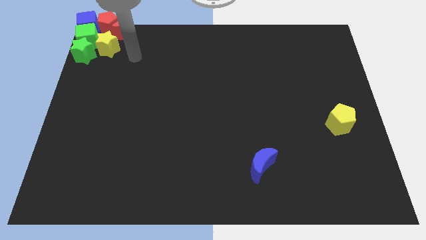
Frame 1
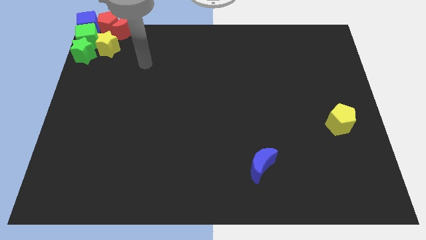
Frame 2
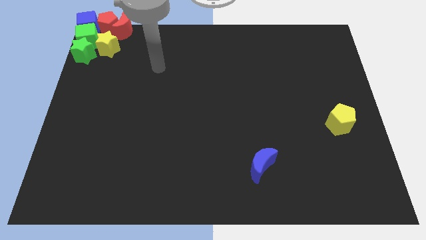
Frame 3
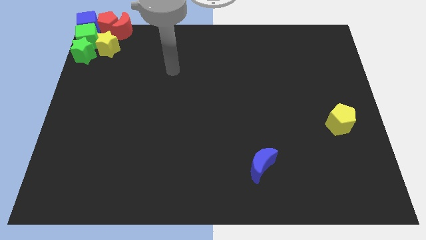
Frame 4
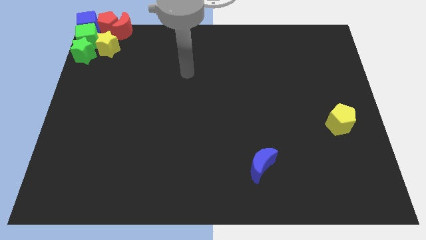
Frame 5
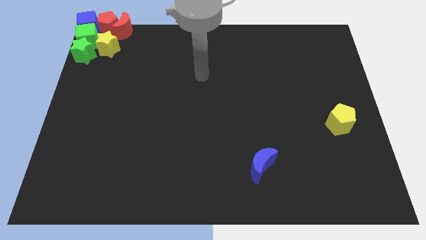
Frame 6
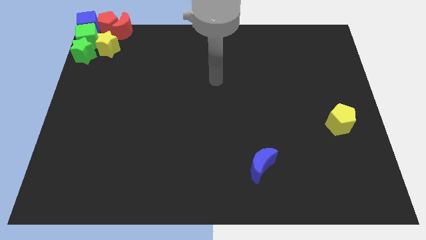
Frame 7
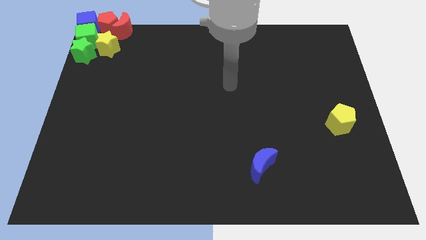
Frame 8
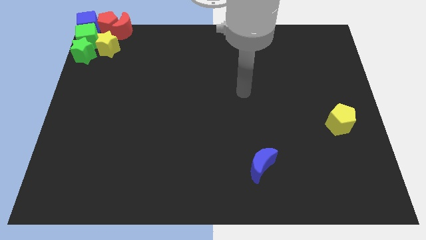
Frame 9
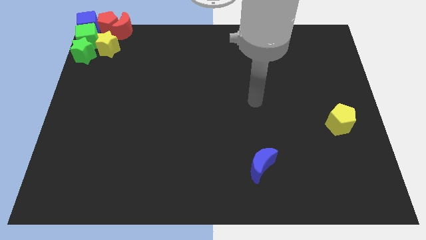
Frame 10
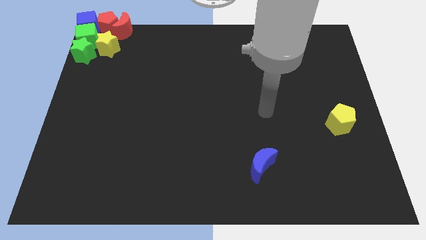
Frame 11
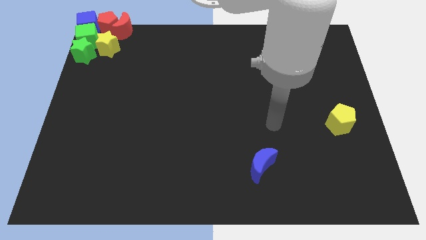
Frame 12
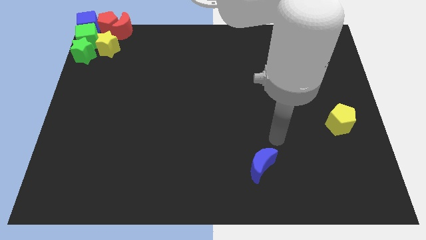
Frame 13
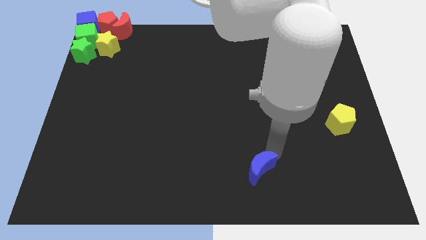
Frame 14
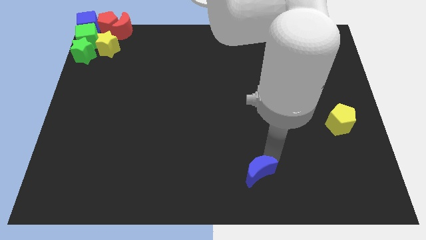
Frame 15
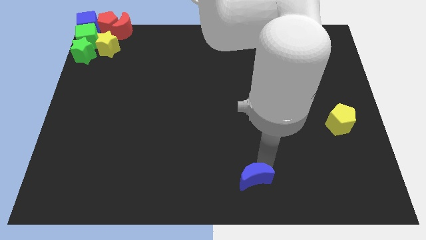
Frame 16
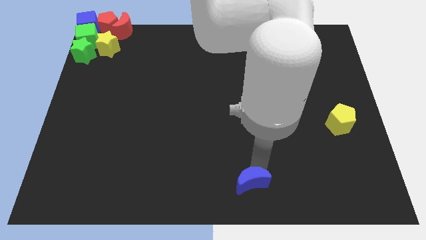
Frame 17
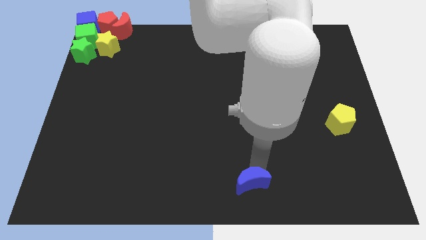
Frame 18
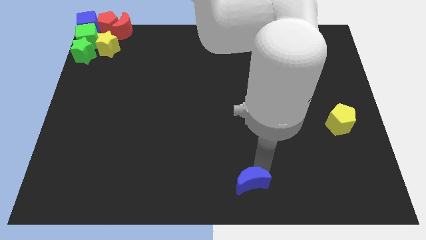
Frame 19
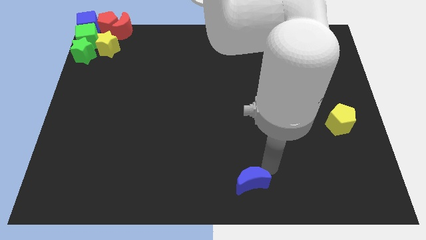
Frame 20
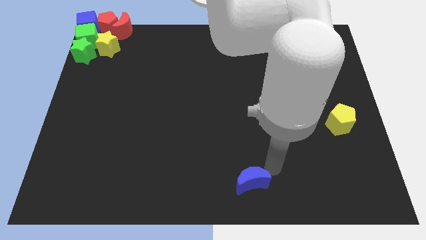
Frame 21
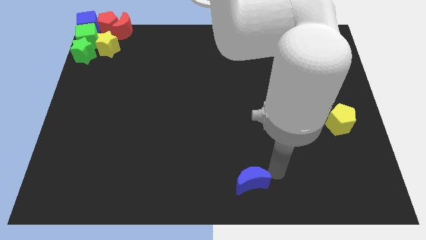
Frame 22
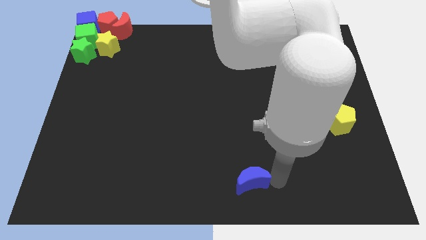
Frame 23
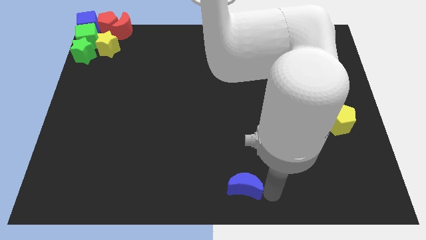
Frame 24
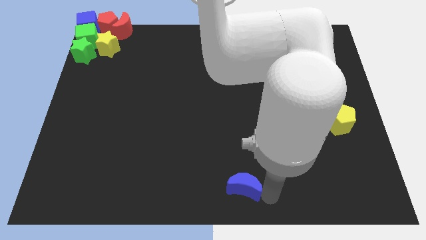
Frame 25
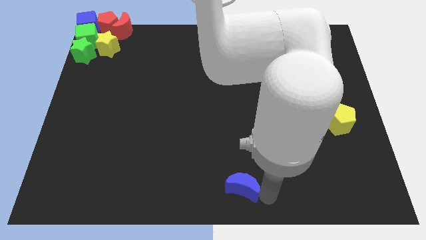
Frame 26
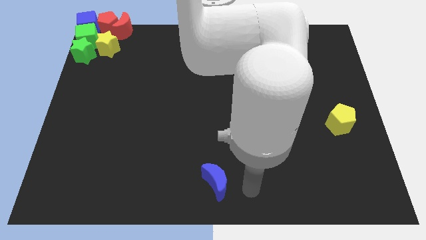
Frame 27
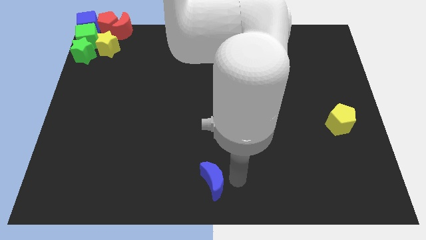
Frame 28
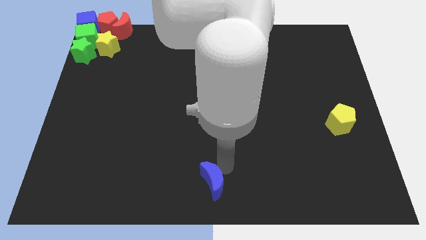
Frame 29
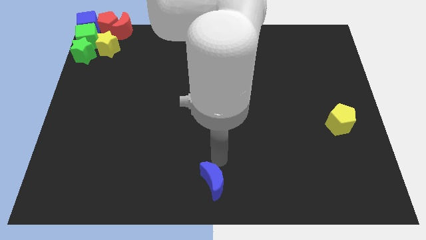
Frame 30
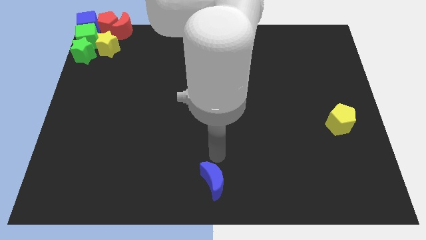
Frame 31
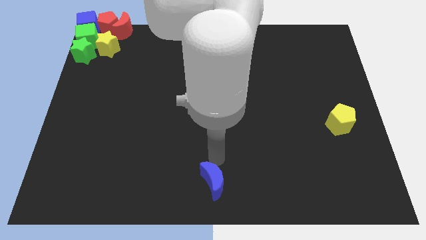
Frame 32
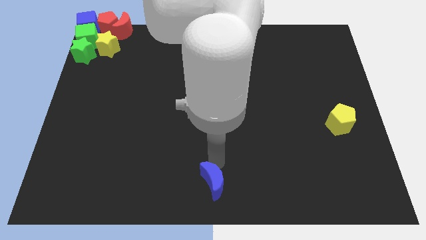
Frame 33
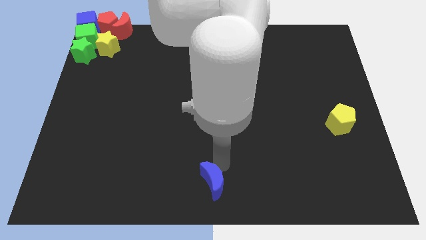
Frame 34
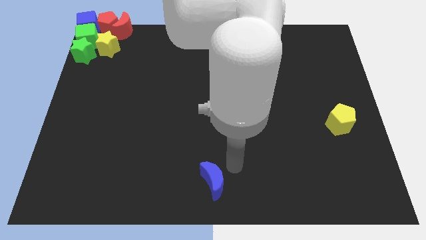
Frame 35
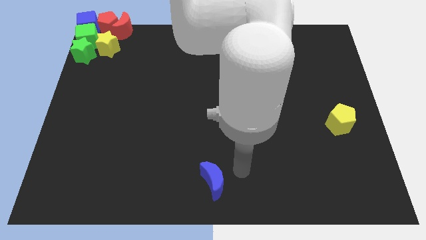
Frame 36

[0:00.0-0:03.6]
place the blue crescent towards bottom center of the board

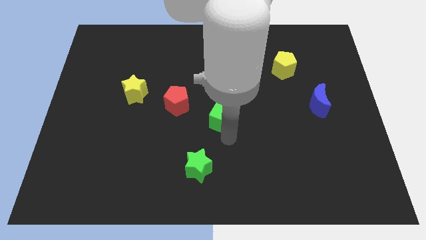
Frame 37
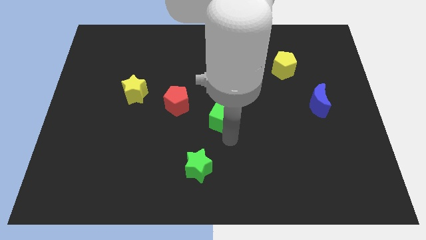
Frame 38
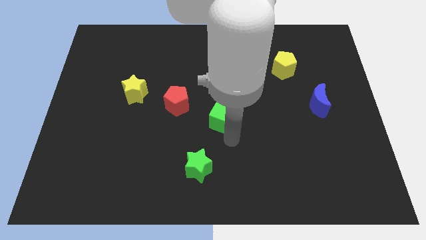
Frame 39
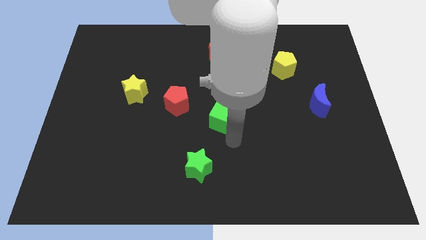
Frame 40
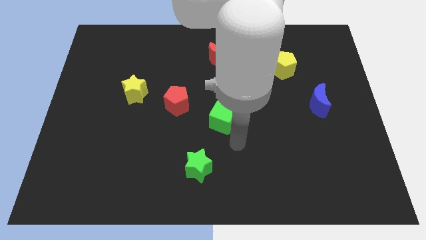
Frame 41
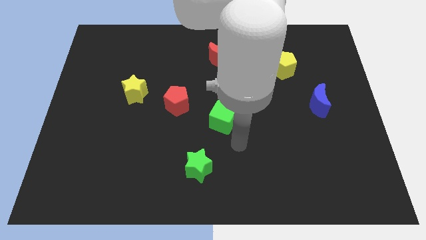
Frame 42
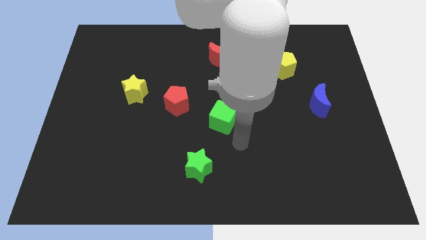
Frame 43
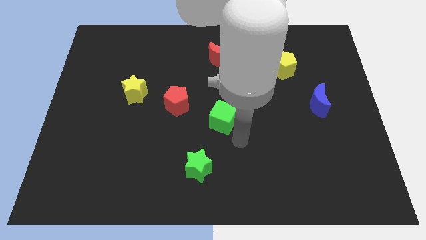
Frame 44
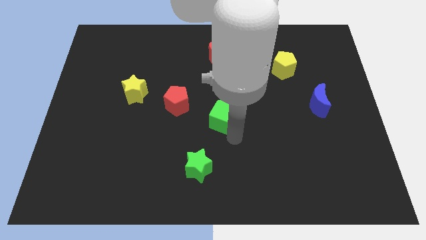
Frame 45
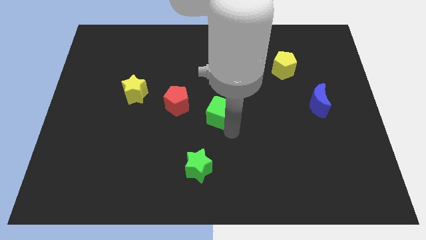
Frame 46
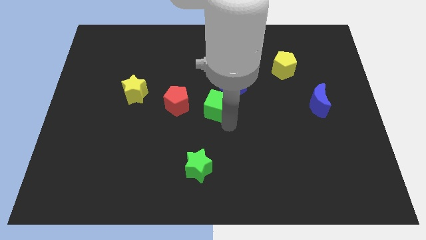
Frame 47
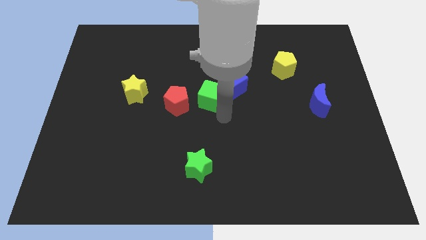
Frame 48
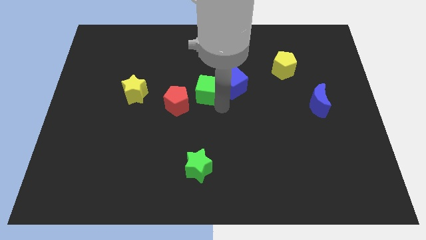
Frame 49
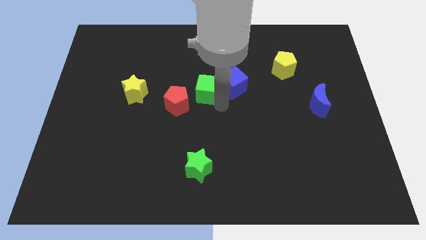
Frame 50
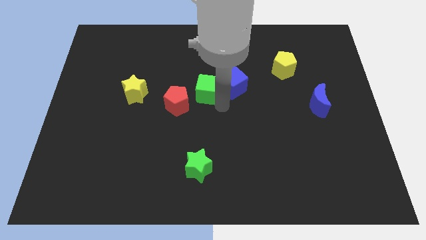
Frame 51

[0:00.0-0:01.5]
place the green cube in between the blue cube and red pentagon

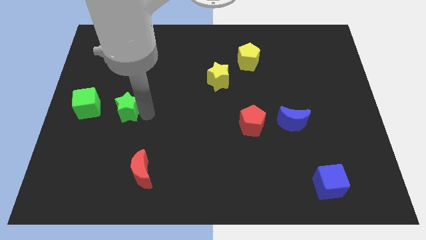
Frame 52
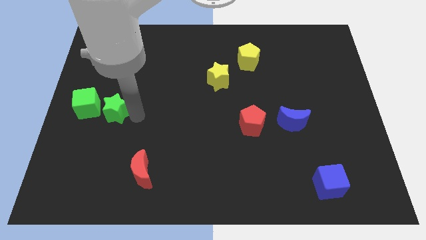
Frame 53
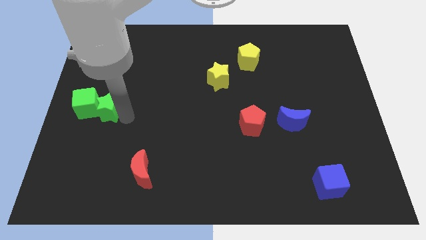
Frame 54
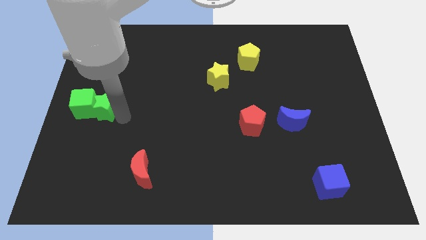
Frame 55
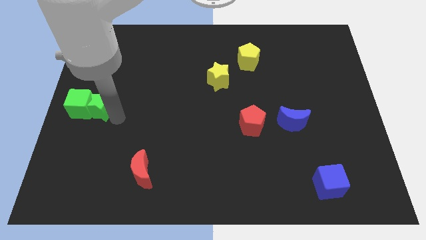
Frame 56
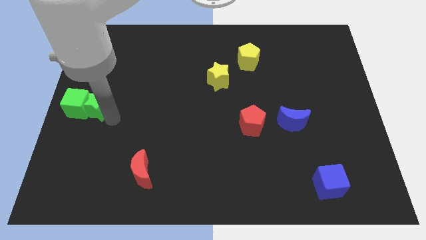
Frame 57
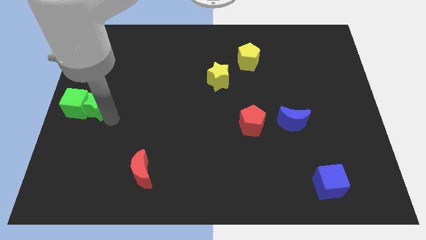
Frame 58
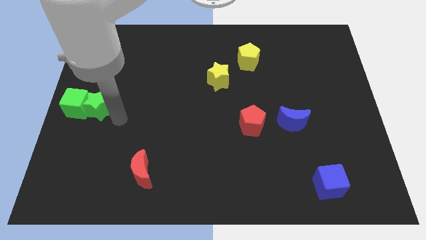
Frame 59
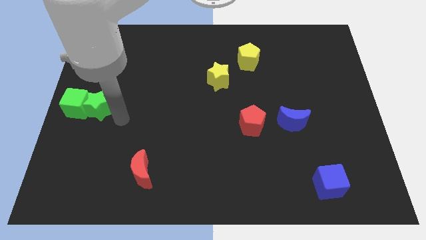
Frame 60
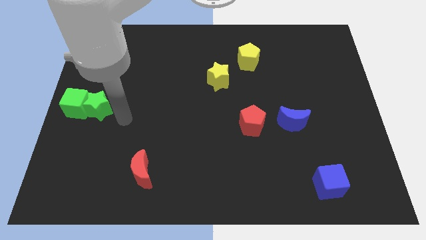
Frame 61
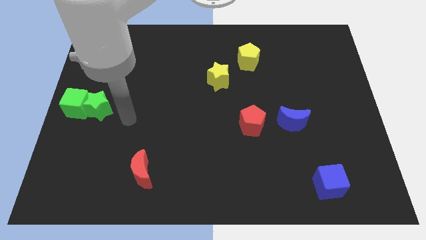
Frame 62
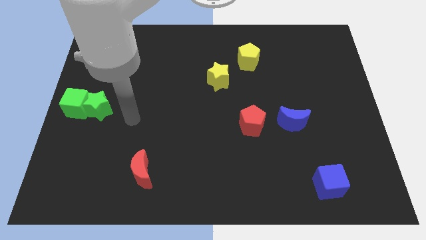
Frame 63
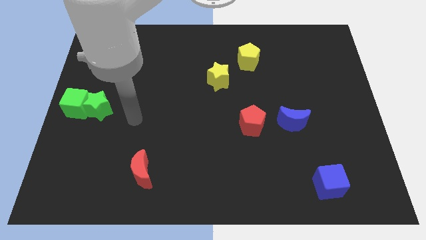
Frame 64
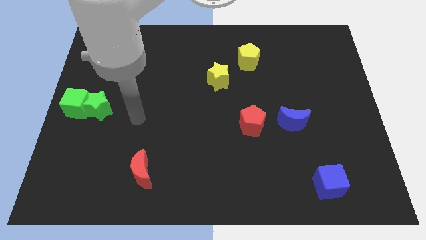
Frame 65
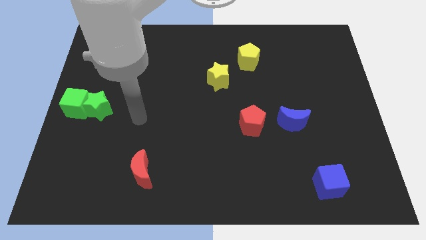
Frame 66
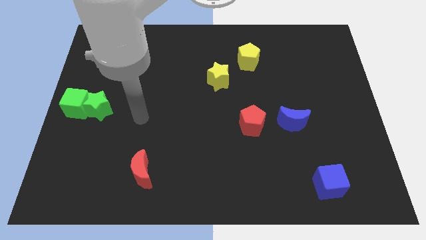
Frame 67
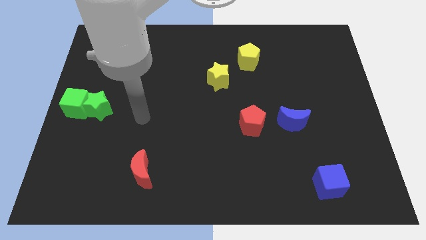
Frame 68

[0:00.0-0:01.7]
push the green star into the green cube

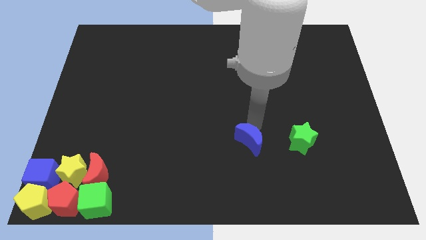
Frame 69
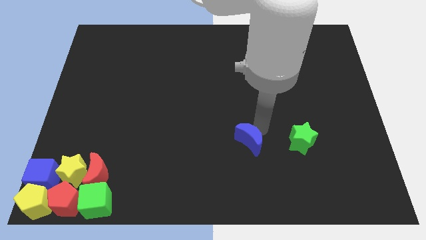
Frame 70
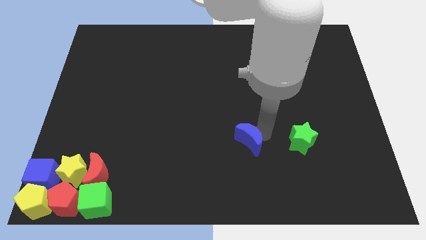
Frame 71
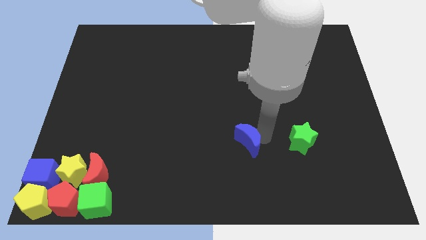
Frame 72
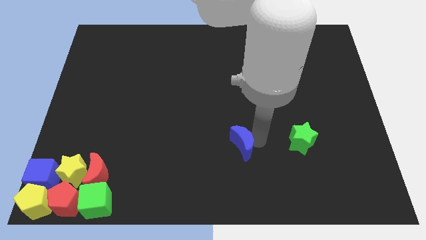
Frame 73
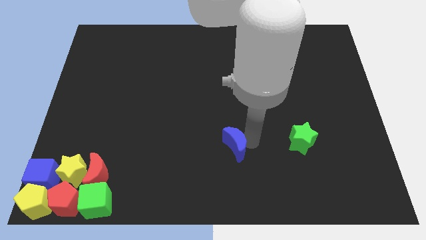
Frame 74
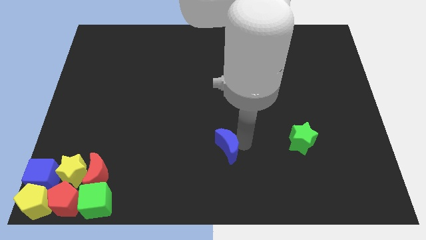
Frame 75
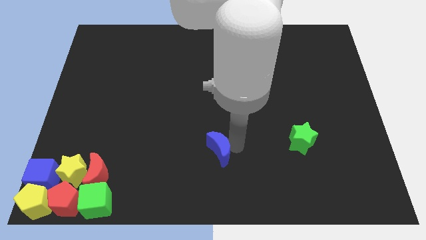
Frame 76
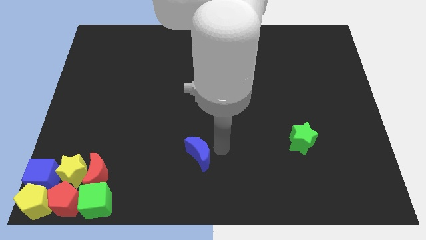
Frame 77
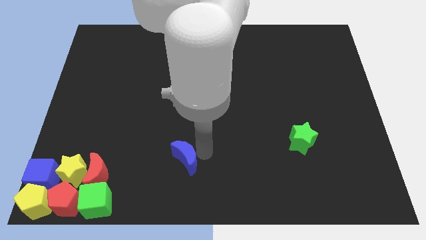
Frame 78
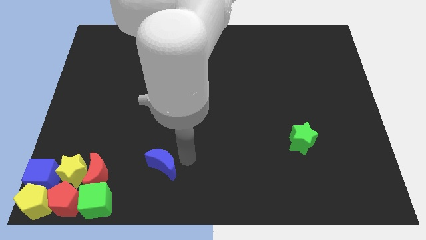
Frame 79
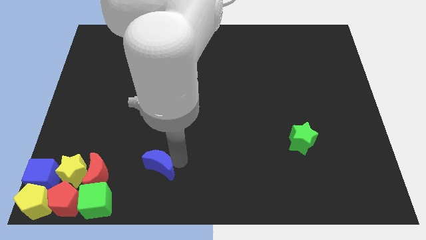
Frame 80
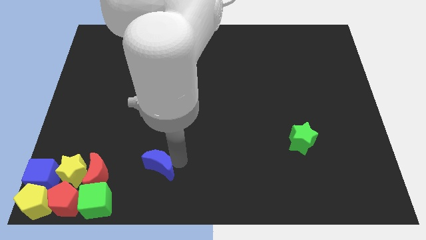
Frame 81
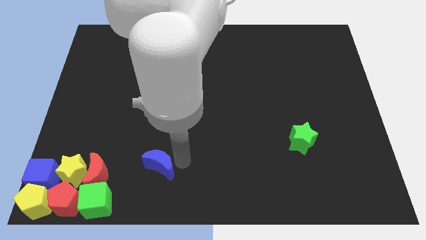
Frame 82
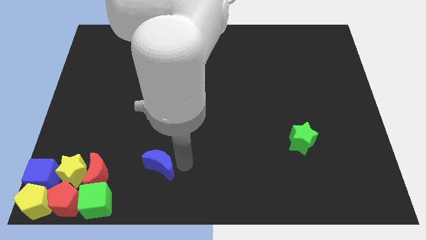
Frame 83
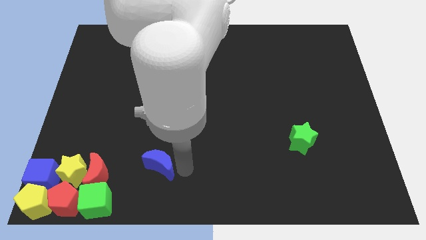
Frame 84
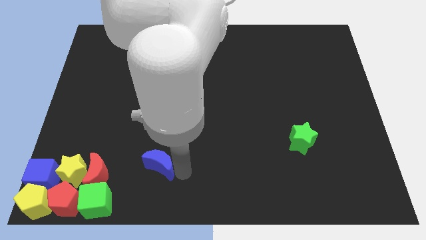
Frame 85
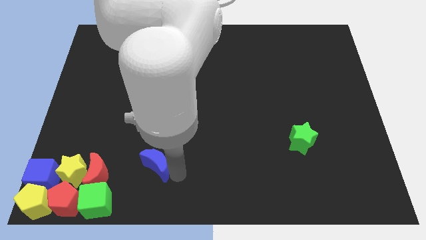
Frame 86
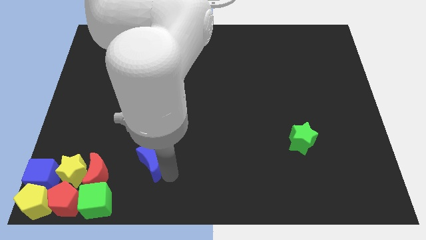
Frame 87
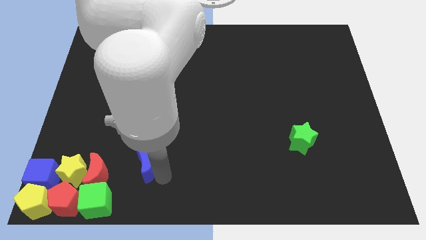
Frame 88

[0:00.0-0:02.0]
move the blue moon towards center left

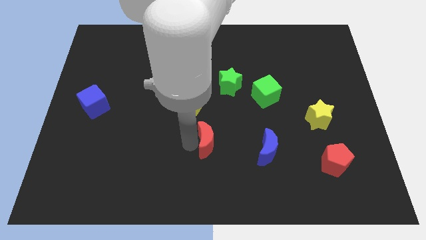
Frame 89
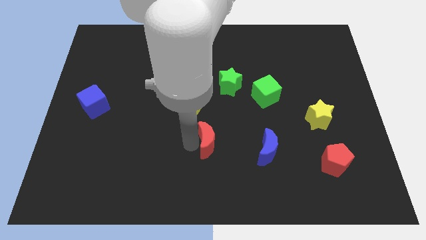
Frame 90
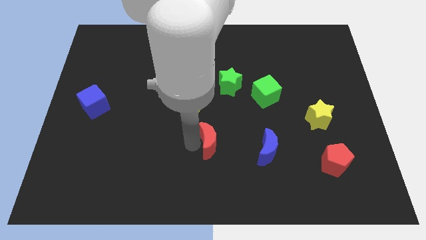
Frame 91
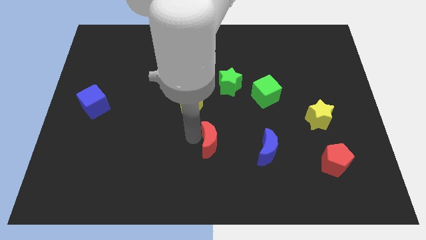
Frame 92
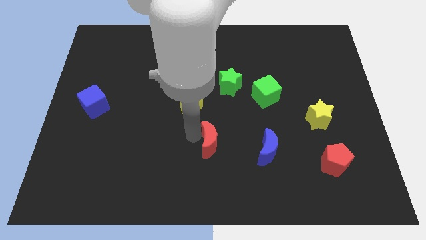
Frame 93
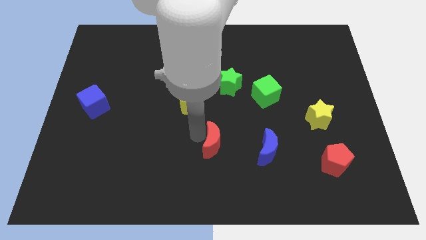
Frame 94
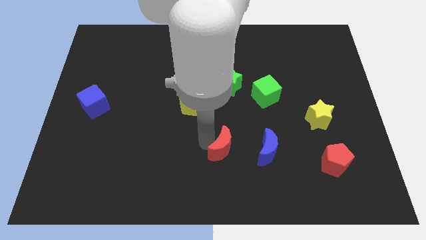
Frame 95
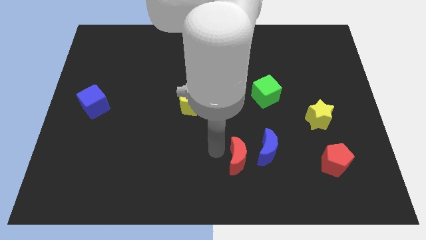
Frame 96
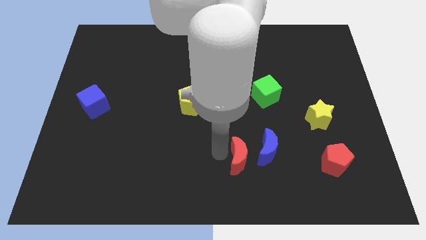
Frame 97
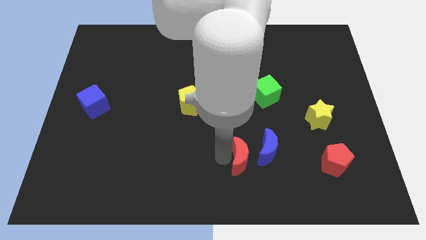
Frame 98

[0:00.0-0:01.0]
push red moon below green star
